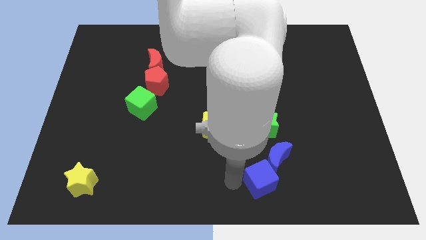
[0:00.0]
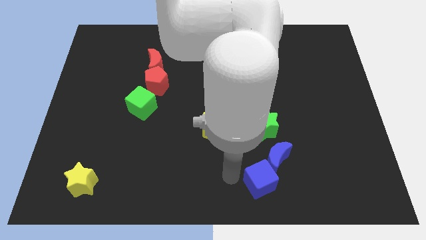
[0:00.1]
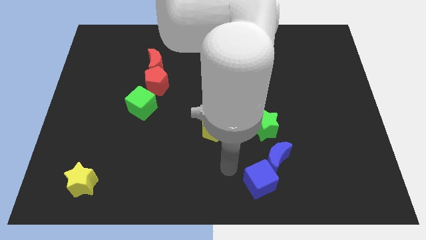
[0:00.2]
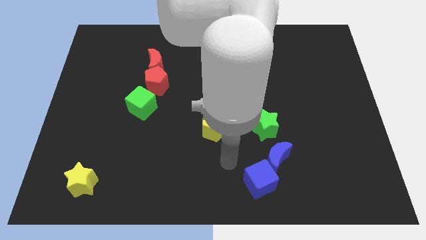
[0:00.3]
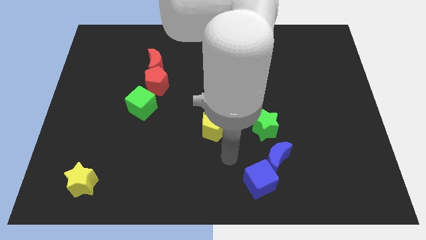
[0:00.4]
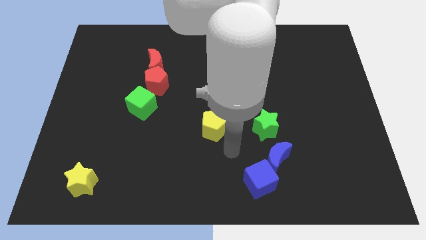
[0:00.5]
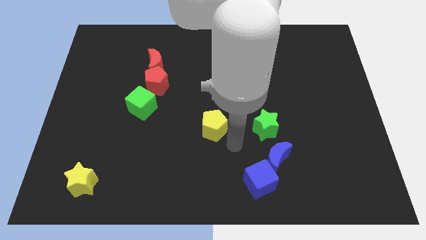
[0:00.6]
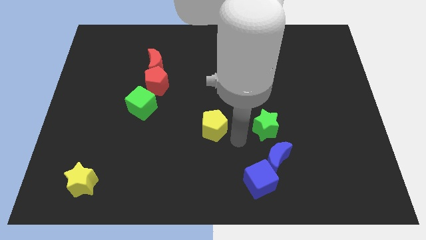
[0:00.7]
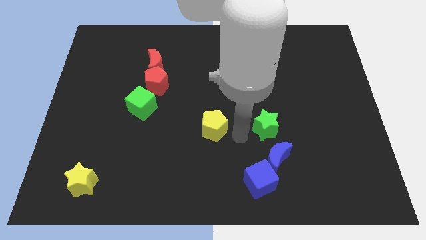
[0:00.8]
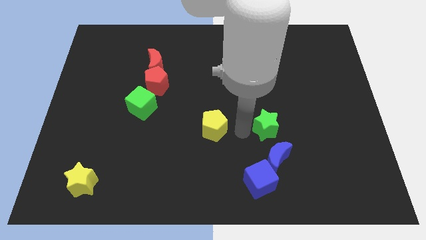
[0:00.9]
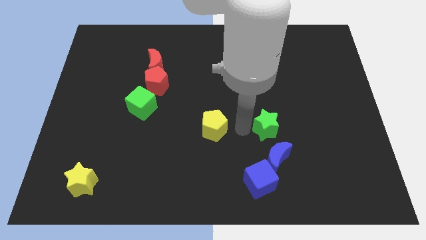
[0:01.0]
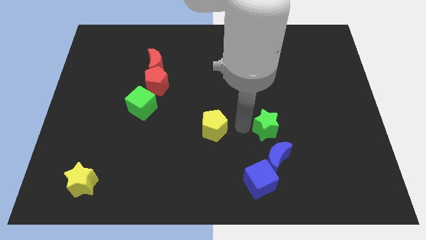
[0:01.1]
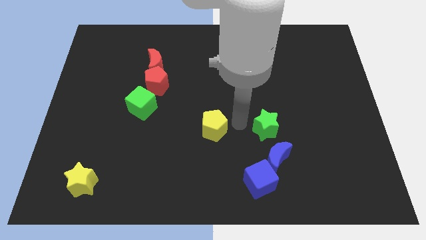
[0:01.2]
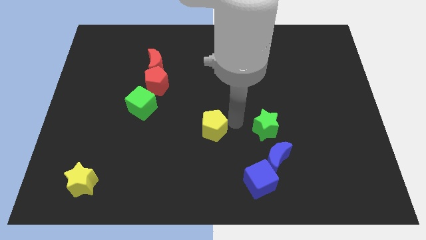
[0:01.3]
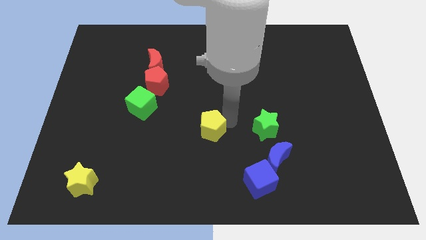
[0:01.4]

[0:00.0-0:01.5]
move the arm to the top of yellow pentagon

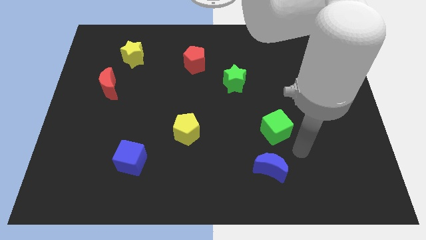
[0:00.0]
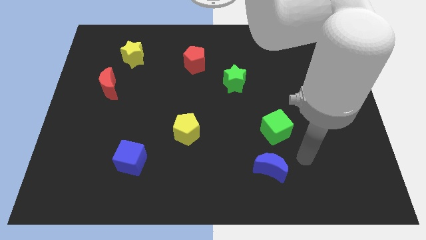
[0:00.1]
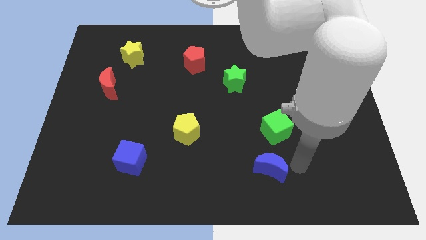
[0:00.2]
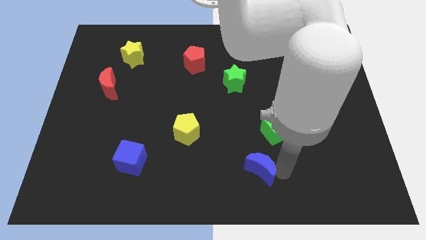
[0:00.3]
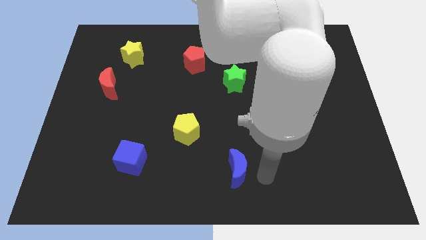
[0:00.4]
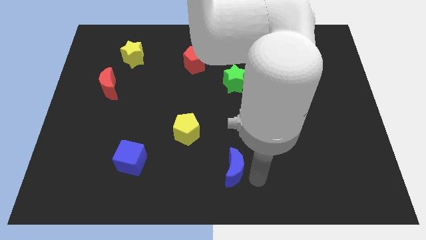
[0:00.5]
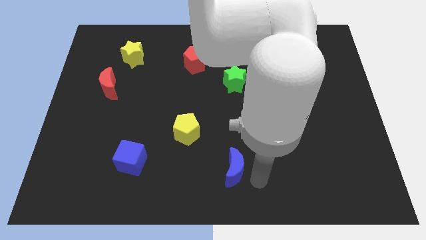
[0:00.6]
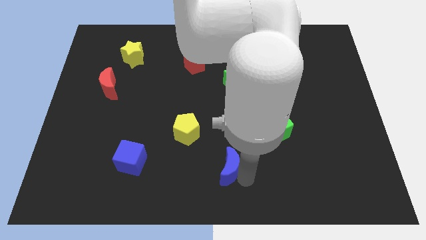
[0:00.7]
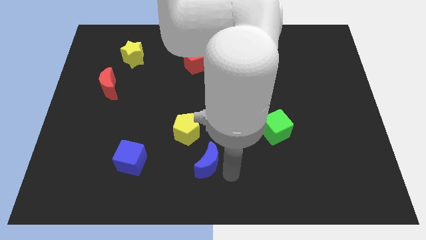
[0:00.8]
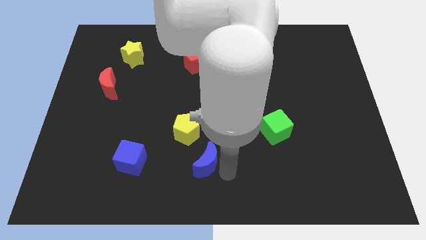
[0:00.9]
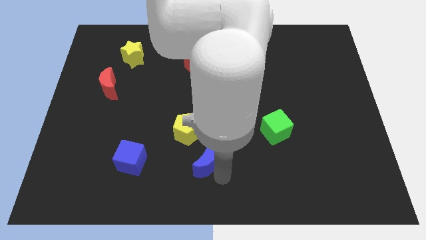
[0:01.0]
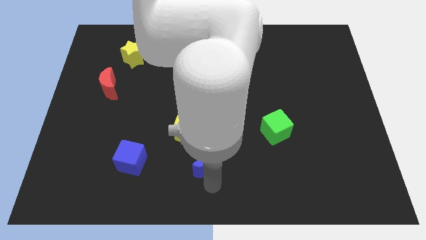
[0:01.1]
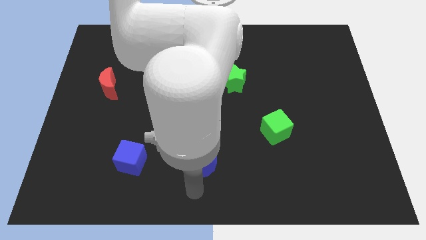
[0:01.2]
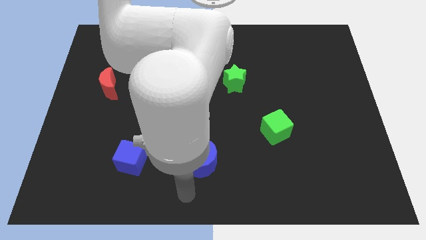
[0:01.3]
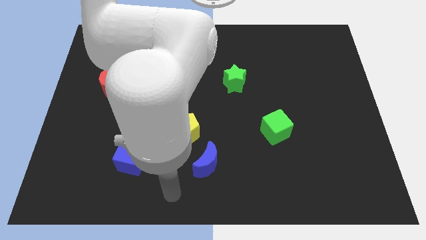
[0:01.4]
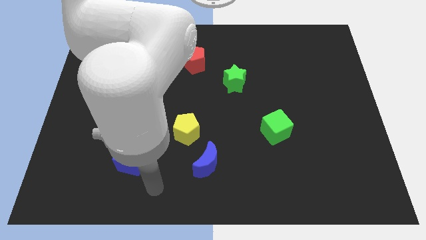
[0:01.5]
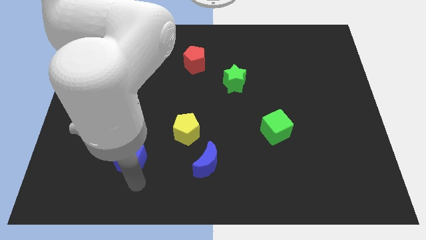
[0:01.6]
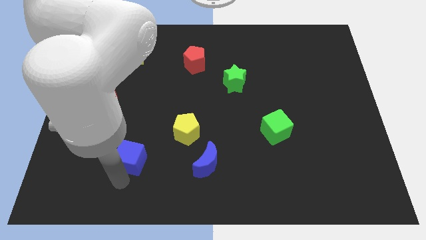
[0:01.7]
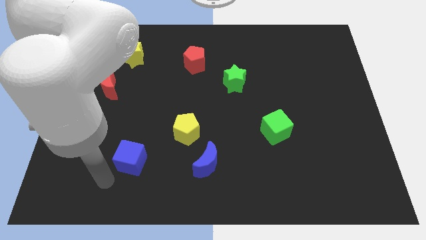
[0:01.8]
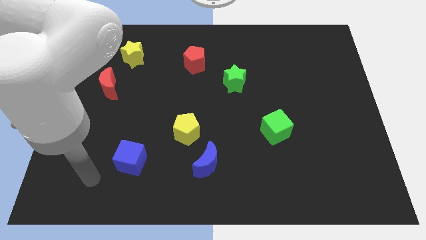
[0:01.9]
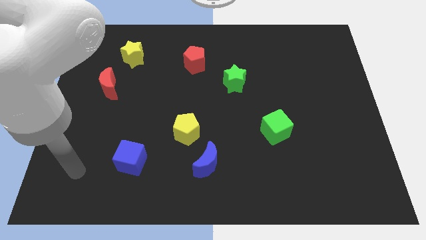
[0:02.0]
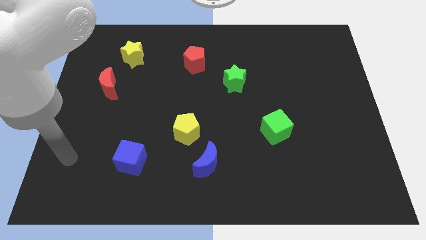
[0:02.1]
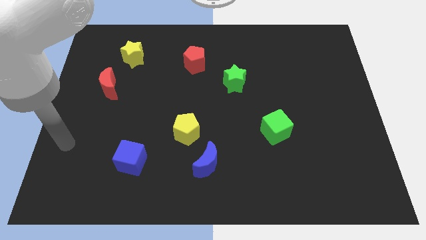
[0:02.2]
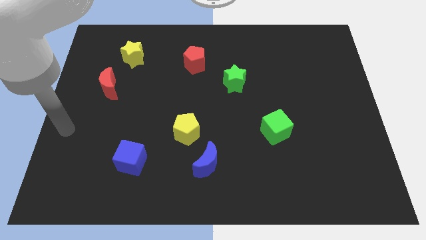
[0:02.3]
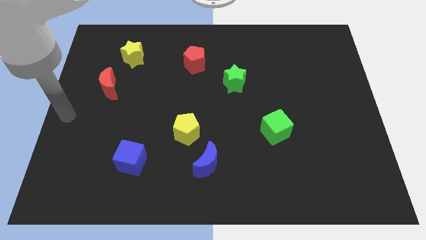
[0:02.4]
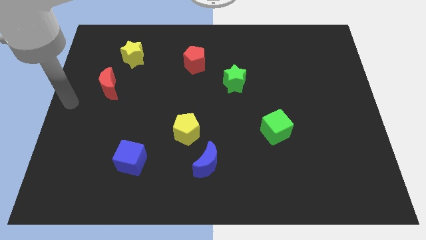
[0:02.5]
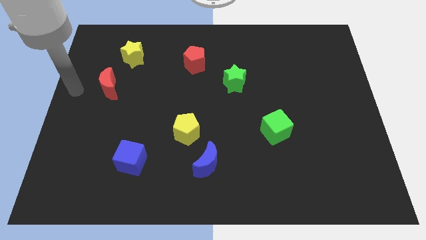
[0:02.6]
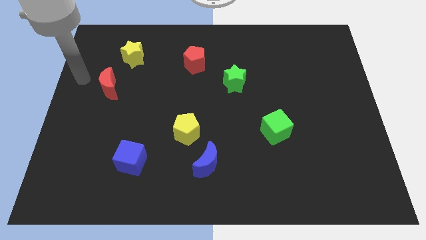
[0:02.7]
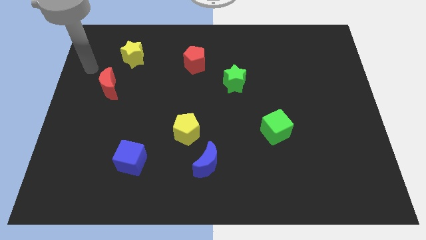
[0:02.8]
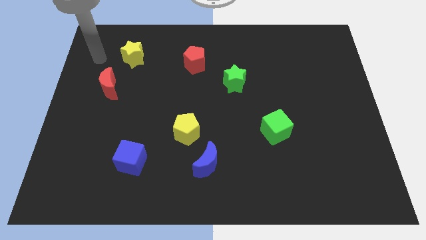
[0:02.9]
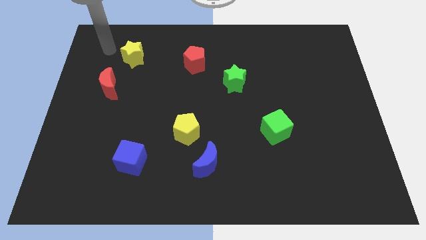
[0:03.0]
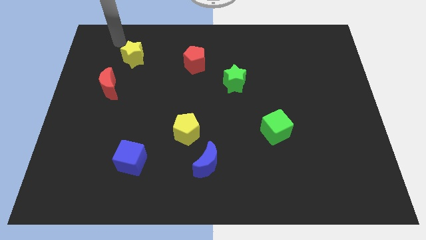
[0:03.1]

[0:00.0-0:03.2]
push the blue moon diagonally to the right of the yellow pentagon

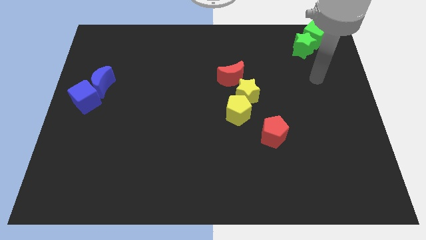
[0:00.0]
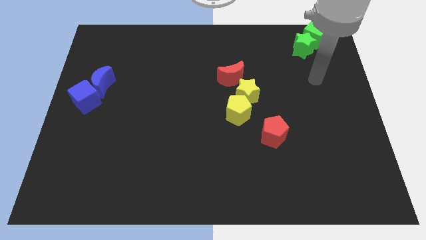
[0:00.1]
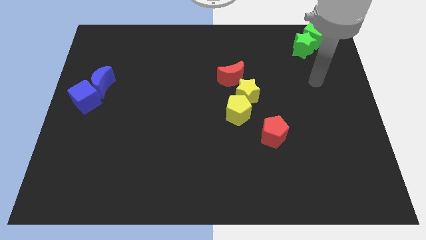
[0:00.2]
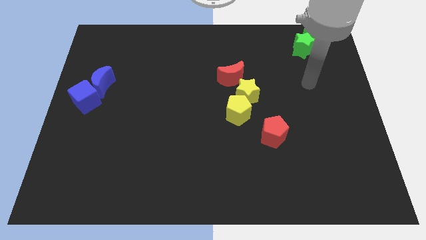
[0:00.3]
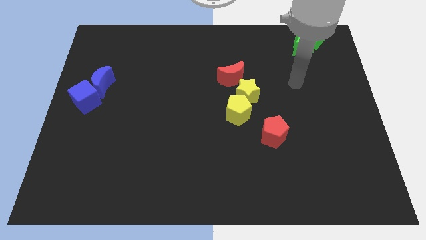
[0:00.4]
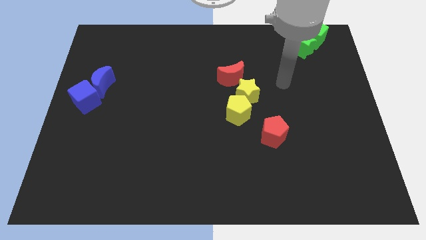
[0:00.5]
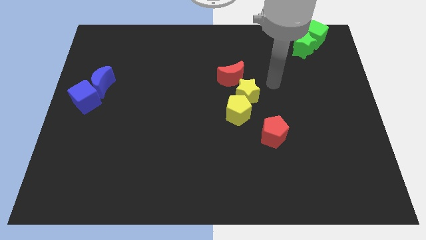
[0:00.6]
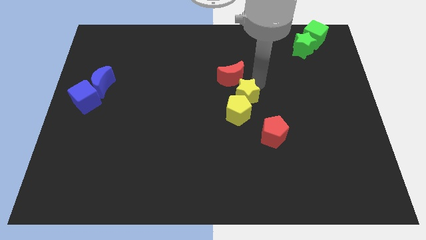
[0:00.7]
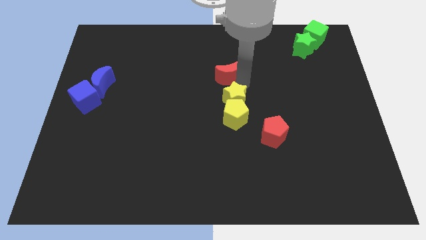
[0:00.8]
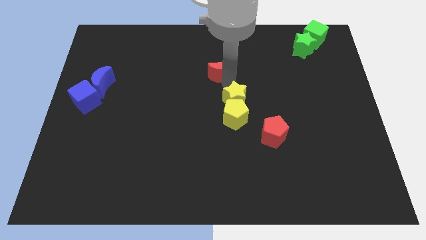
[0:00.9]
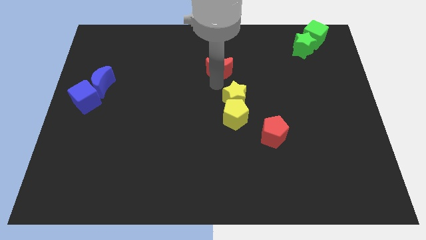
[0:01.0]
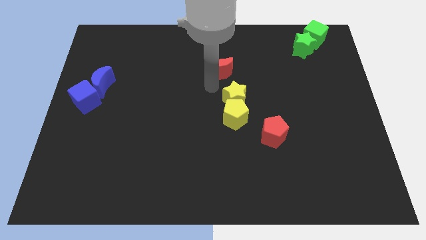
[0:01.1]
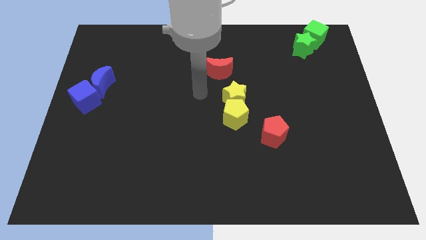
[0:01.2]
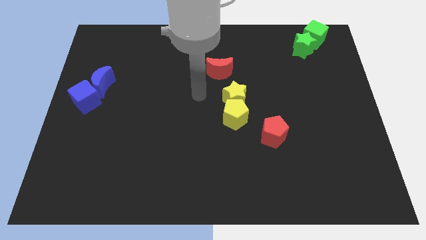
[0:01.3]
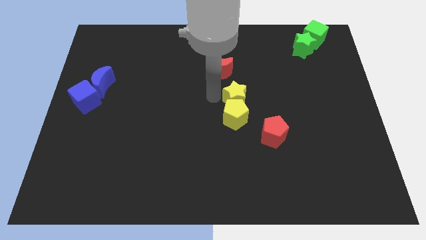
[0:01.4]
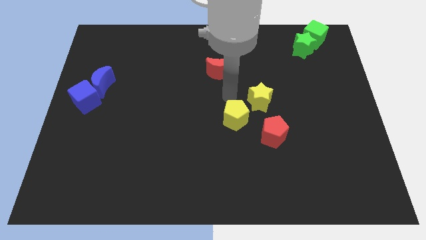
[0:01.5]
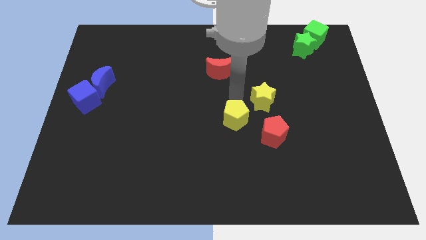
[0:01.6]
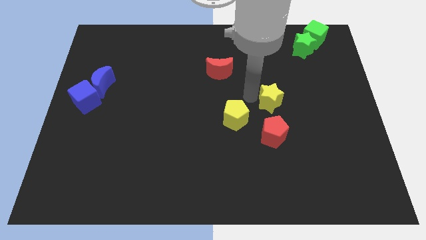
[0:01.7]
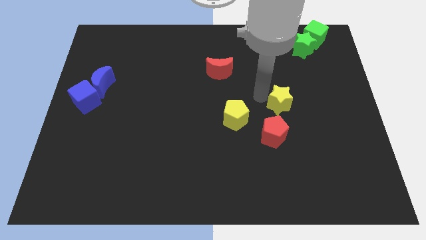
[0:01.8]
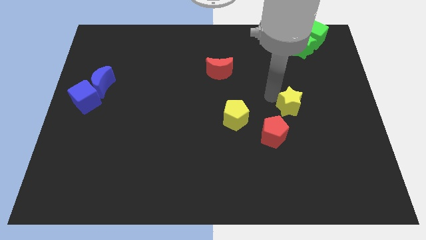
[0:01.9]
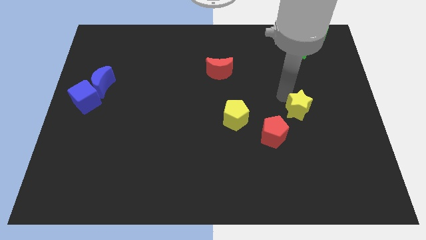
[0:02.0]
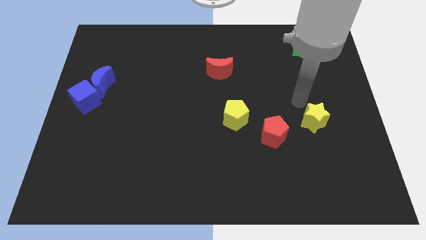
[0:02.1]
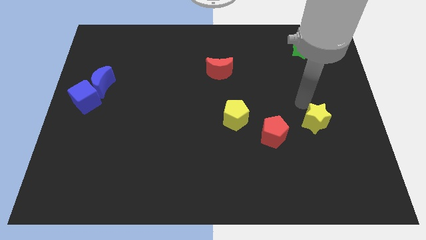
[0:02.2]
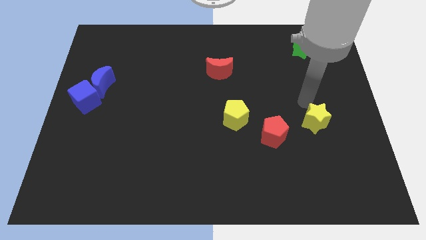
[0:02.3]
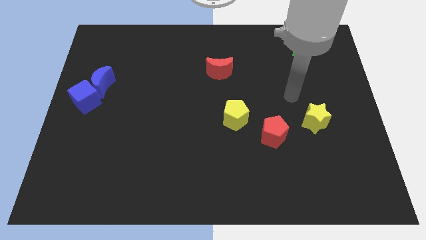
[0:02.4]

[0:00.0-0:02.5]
move the yellow star diagonally right of the red pentagon

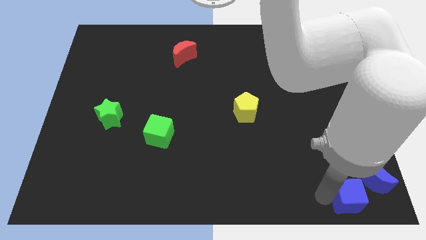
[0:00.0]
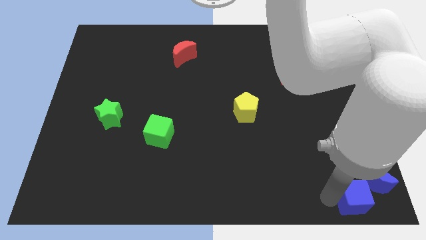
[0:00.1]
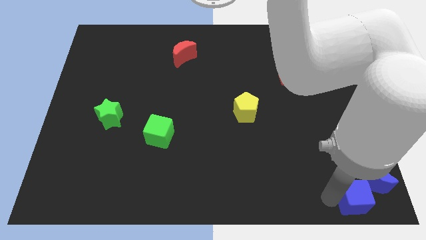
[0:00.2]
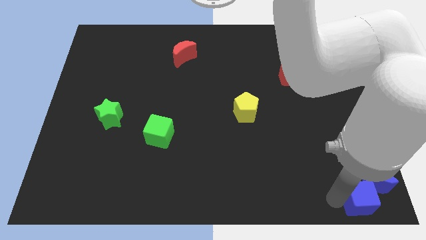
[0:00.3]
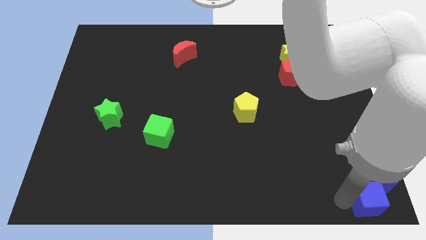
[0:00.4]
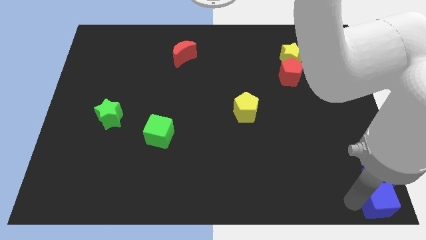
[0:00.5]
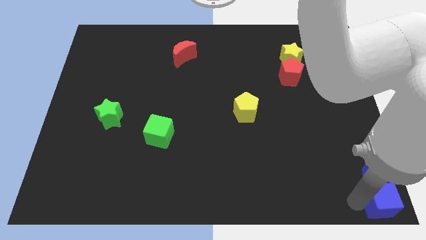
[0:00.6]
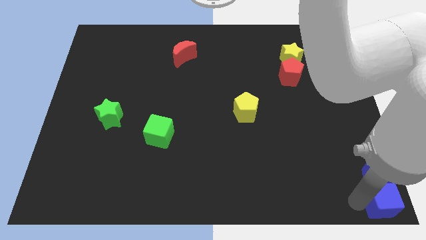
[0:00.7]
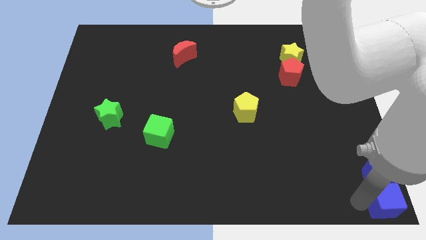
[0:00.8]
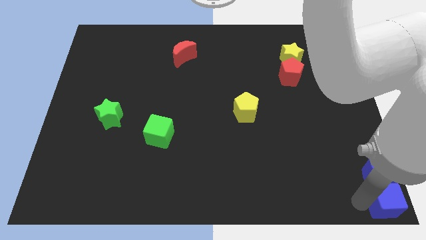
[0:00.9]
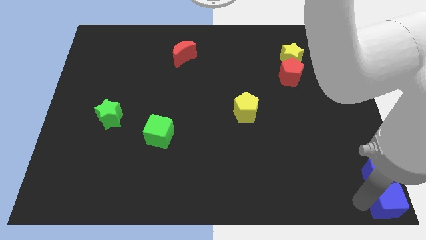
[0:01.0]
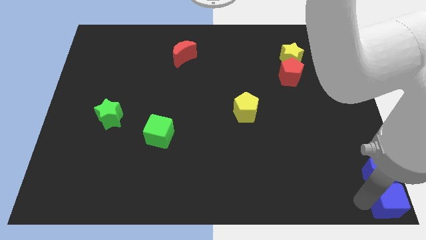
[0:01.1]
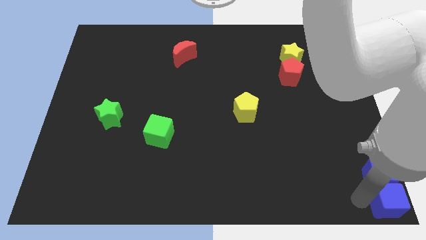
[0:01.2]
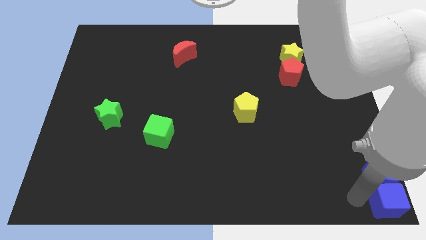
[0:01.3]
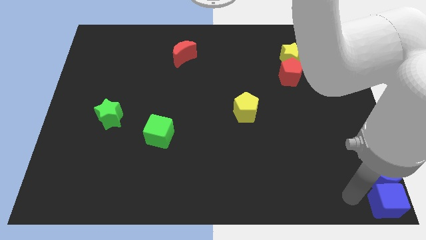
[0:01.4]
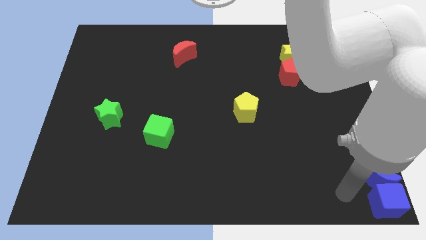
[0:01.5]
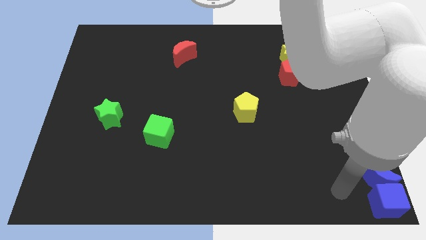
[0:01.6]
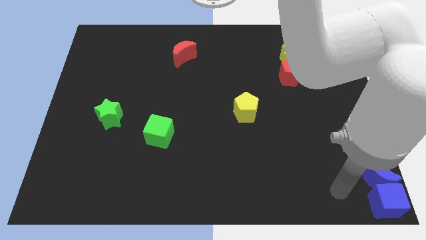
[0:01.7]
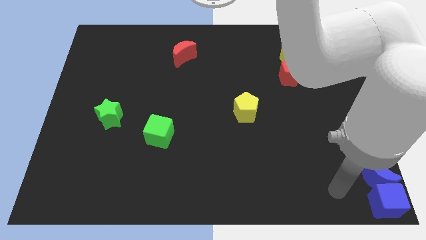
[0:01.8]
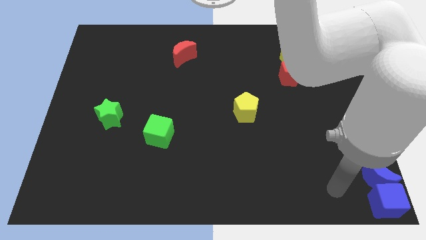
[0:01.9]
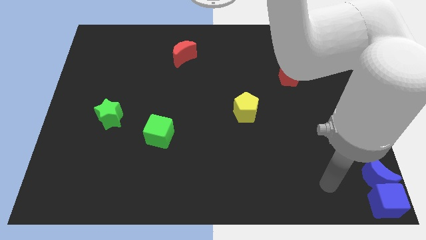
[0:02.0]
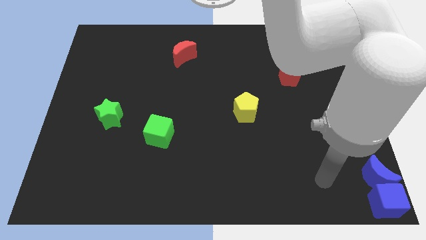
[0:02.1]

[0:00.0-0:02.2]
slightly push the blue cube to the bottom right of the board
